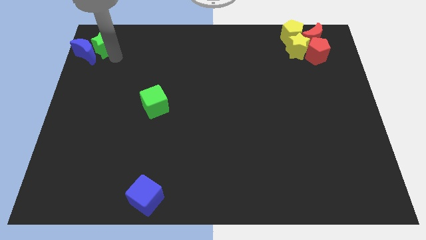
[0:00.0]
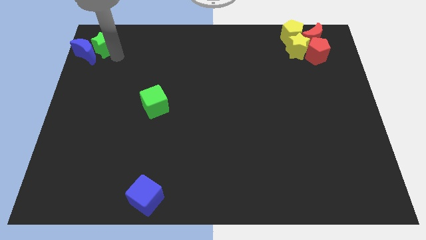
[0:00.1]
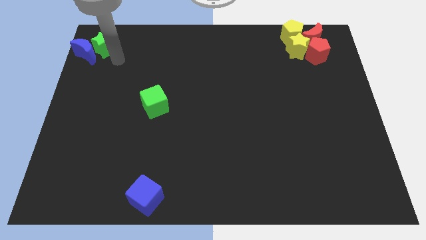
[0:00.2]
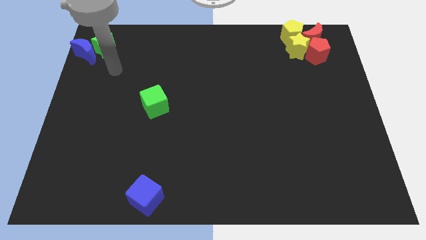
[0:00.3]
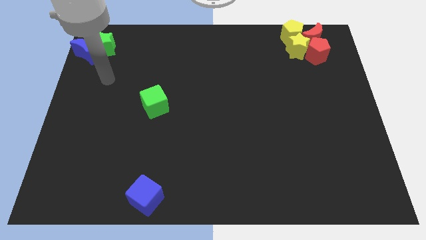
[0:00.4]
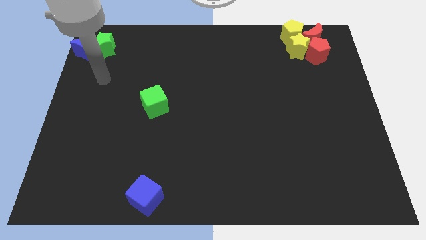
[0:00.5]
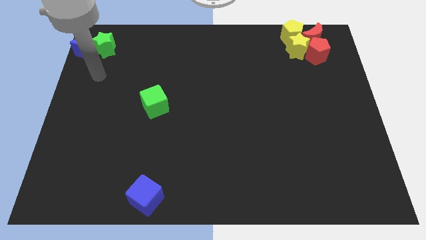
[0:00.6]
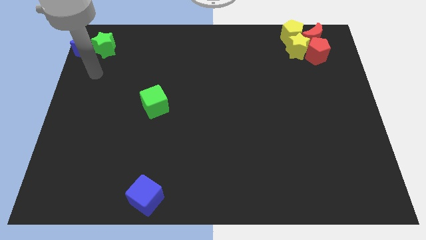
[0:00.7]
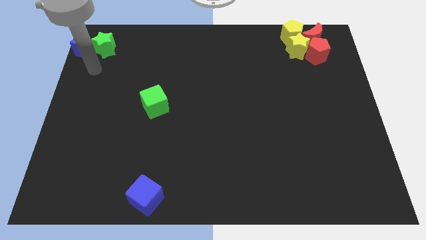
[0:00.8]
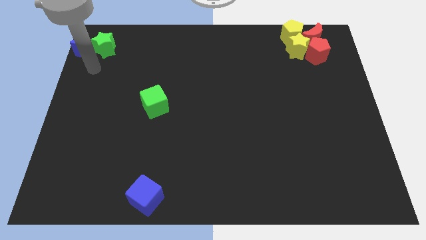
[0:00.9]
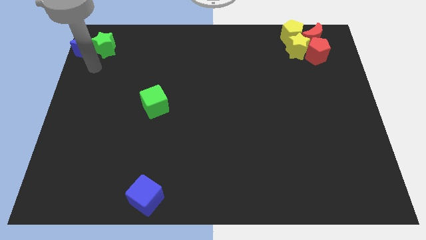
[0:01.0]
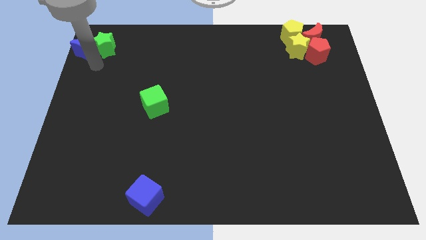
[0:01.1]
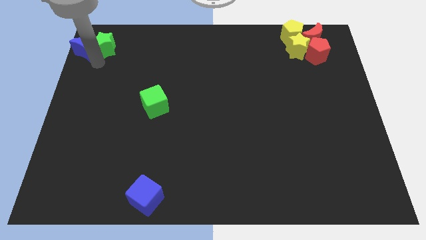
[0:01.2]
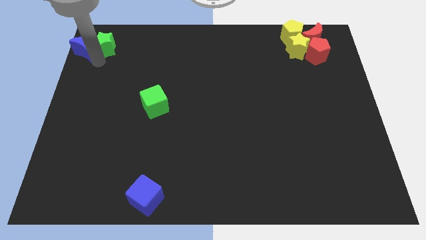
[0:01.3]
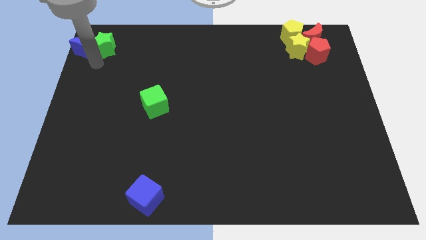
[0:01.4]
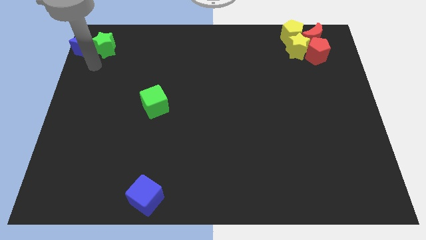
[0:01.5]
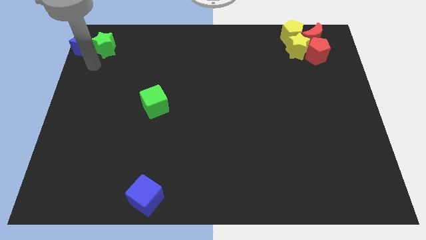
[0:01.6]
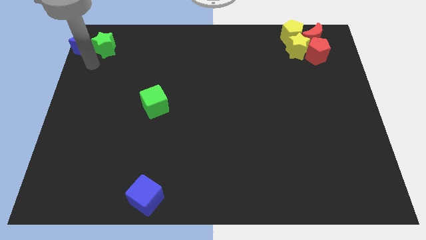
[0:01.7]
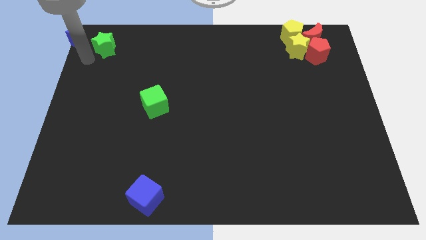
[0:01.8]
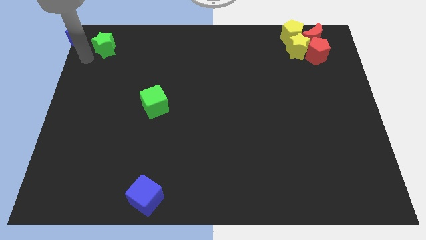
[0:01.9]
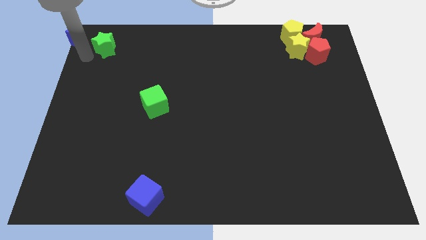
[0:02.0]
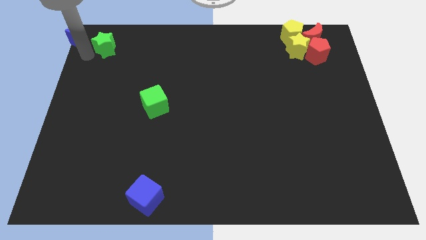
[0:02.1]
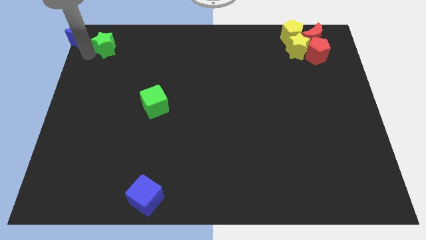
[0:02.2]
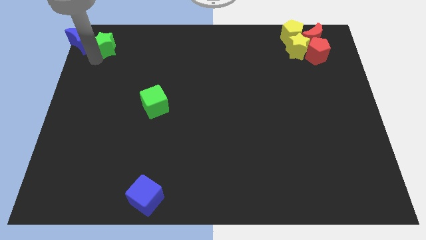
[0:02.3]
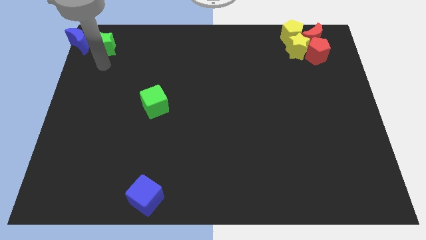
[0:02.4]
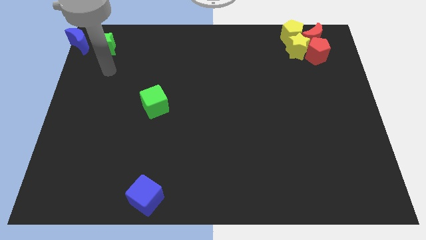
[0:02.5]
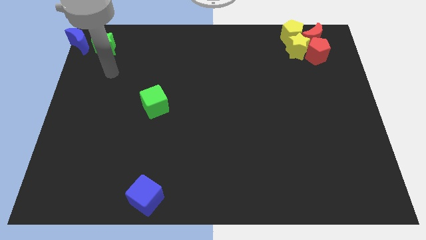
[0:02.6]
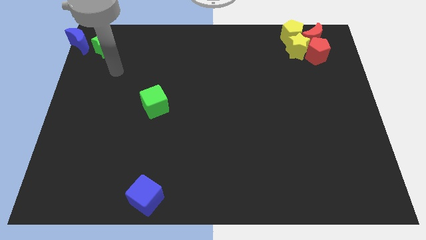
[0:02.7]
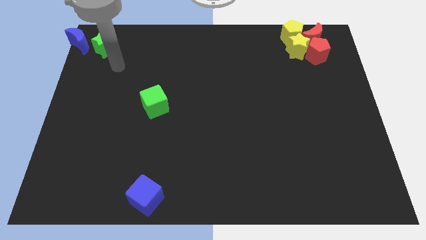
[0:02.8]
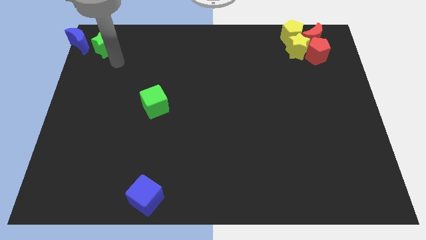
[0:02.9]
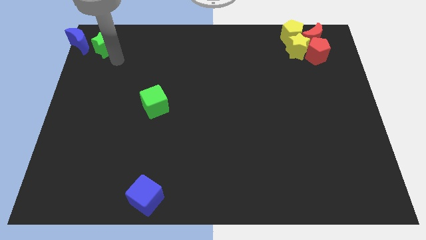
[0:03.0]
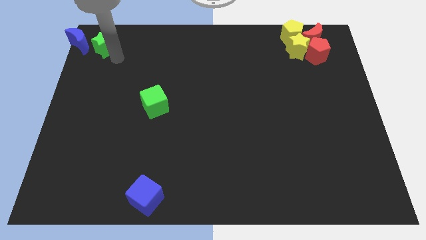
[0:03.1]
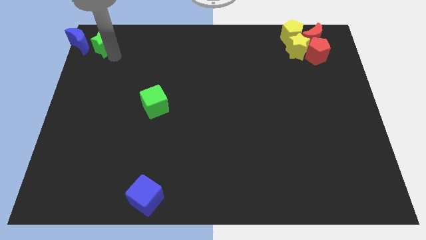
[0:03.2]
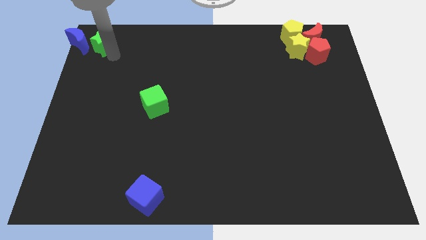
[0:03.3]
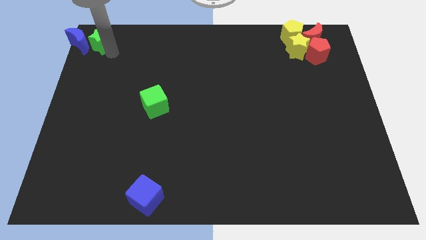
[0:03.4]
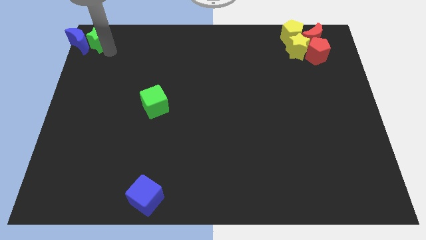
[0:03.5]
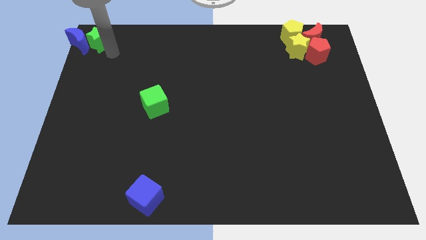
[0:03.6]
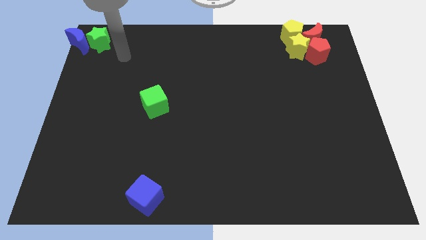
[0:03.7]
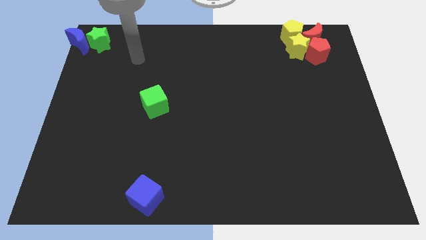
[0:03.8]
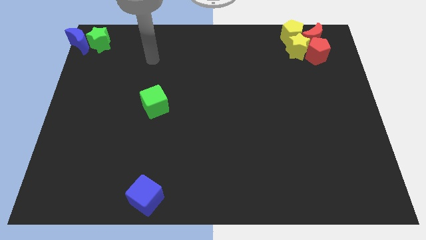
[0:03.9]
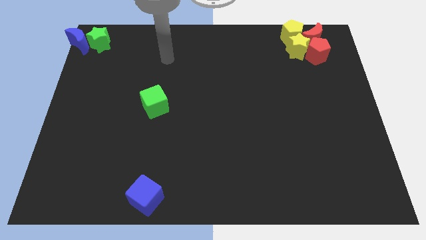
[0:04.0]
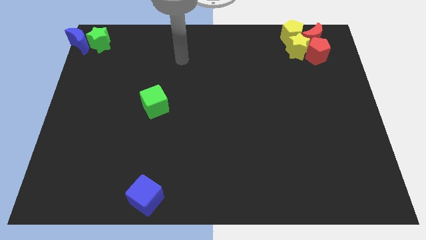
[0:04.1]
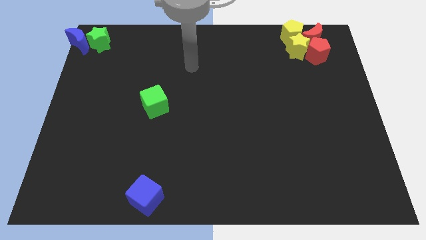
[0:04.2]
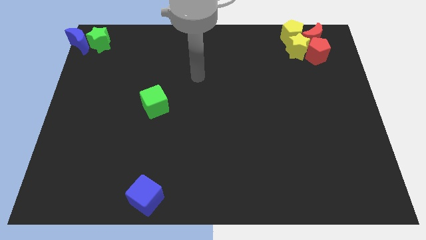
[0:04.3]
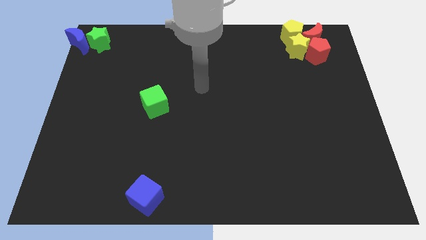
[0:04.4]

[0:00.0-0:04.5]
place green star along with blue moon to the top left corner

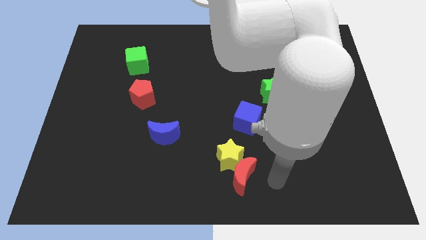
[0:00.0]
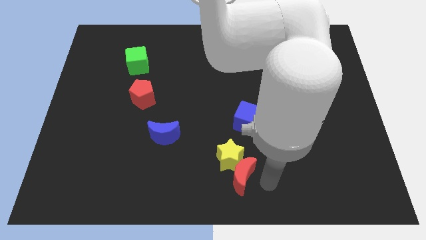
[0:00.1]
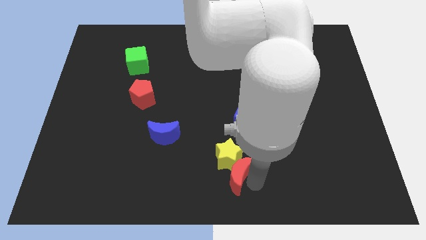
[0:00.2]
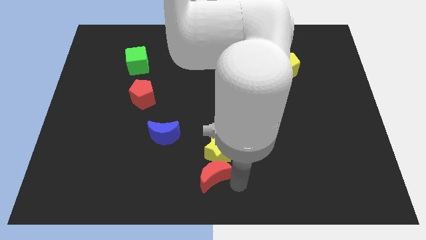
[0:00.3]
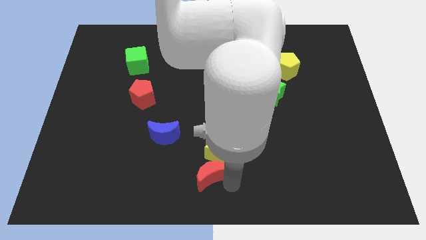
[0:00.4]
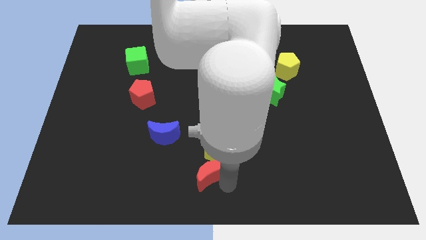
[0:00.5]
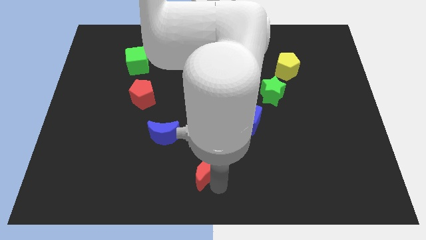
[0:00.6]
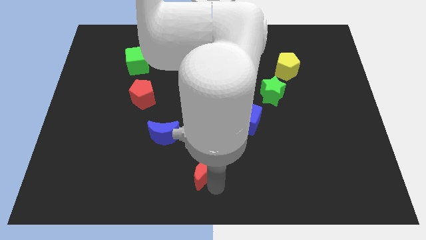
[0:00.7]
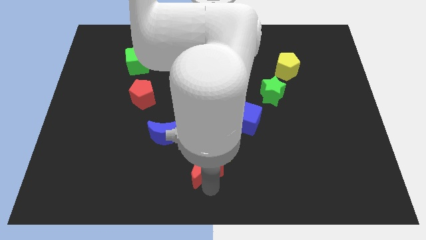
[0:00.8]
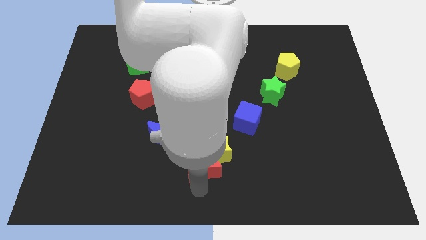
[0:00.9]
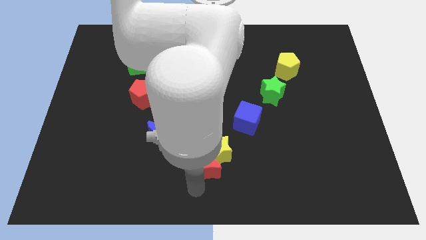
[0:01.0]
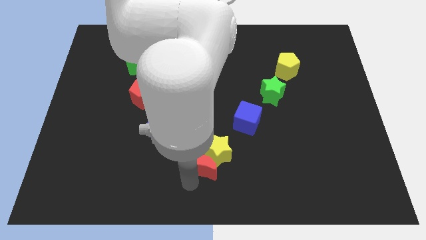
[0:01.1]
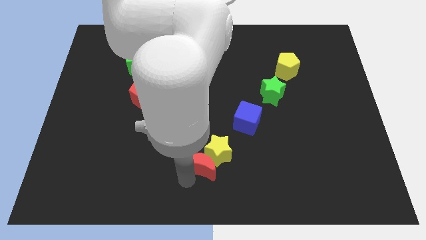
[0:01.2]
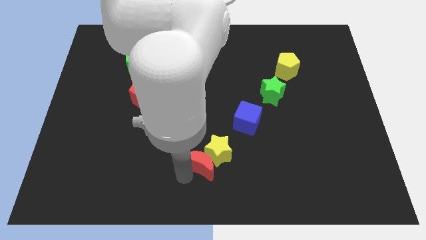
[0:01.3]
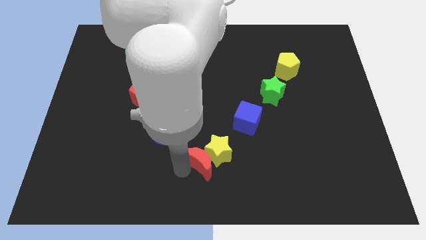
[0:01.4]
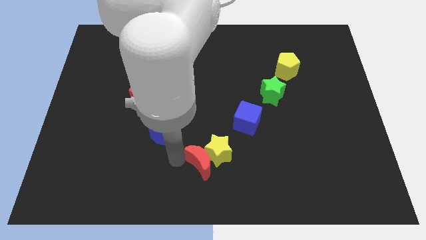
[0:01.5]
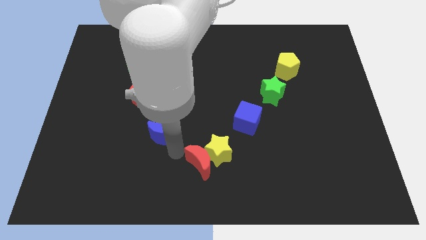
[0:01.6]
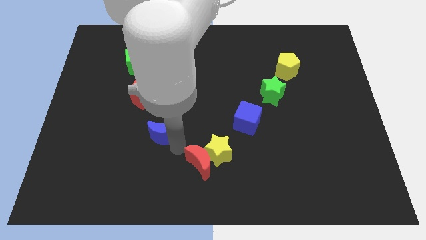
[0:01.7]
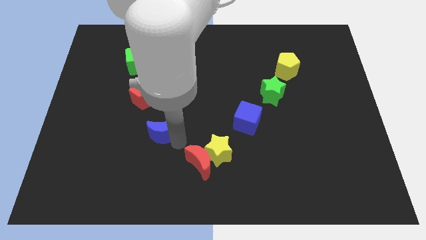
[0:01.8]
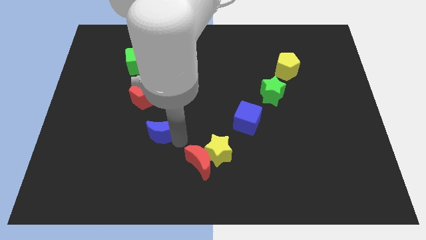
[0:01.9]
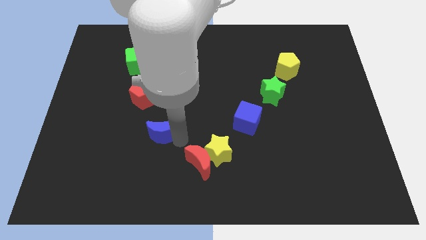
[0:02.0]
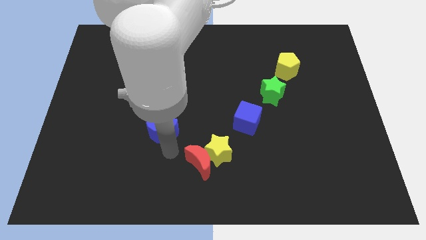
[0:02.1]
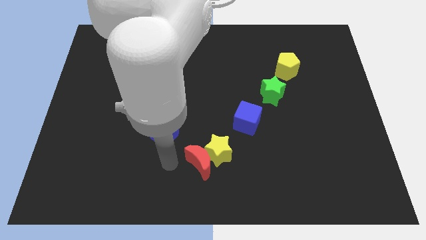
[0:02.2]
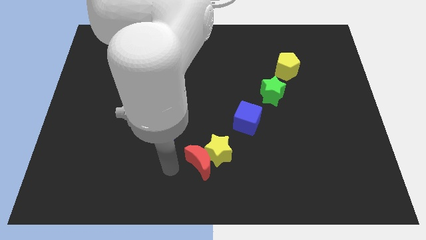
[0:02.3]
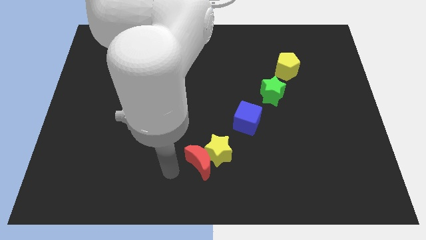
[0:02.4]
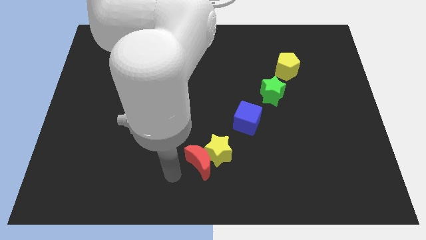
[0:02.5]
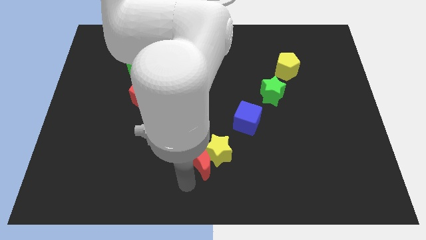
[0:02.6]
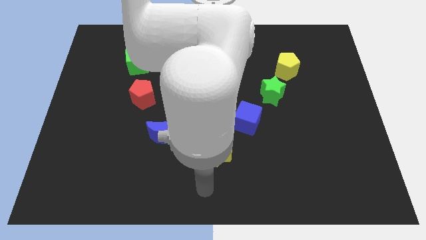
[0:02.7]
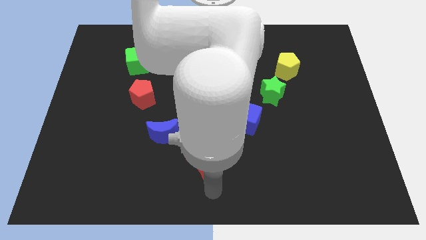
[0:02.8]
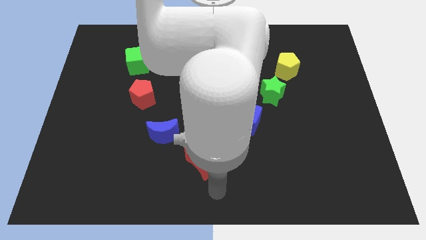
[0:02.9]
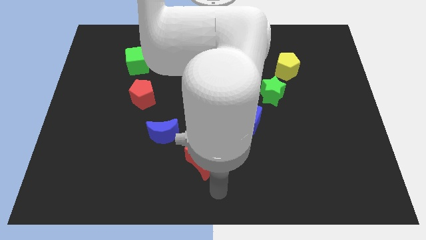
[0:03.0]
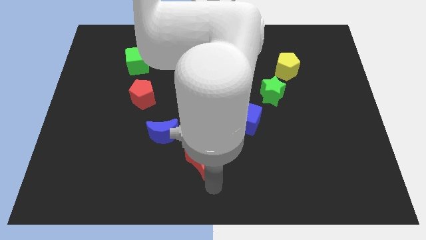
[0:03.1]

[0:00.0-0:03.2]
push the red moon slightly to the left side

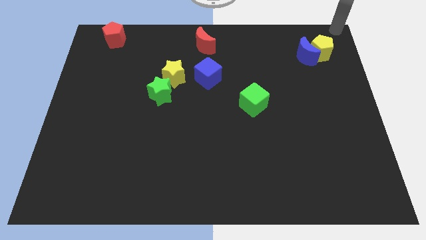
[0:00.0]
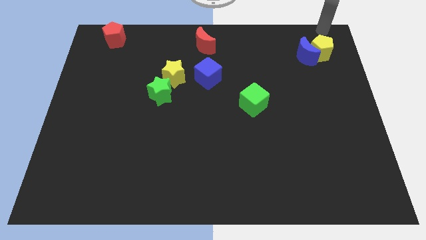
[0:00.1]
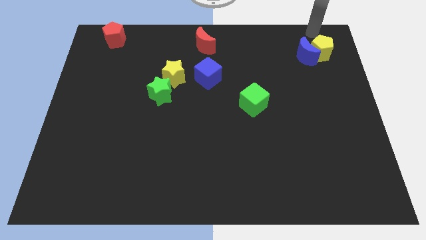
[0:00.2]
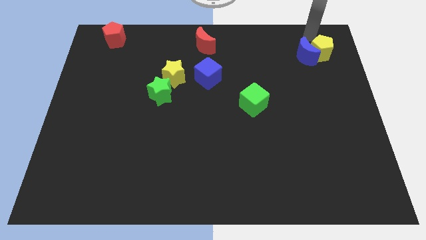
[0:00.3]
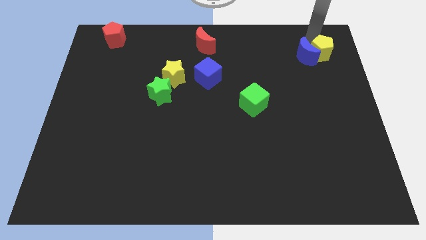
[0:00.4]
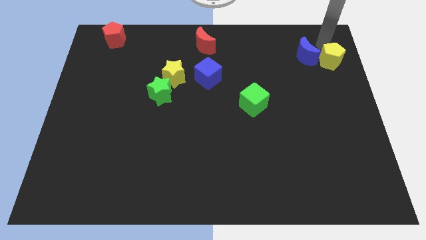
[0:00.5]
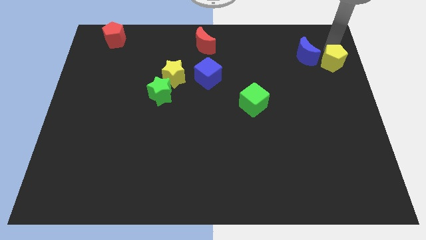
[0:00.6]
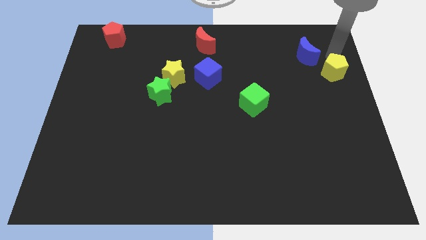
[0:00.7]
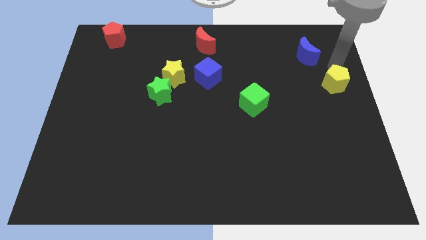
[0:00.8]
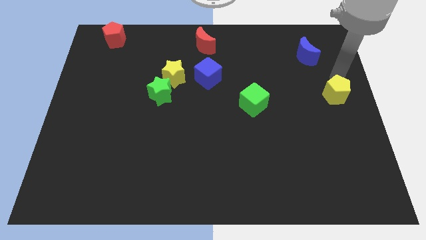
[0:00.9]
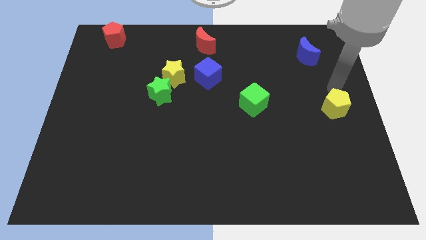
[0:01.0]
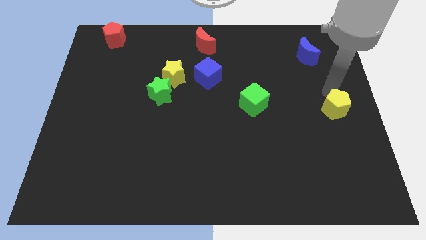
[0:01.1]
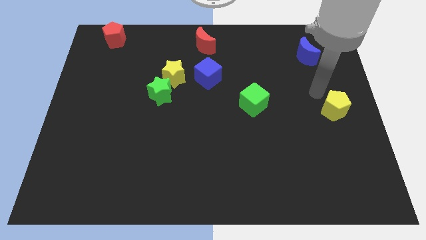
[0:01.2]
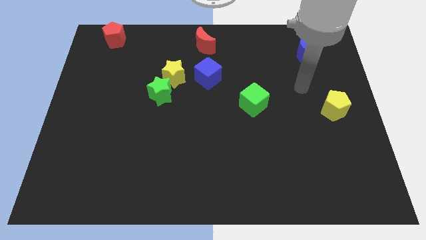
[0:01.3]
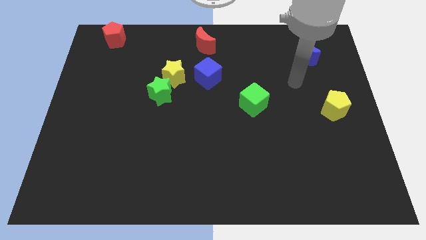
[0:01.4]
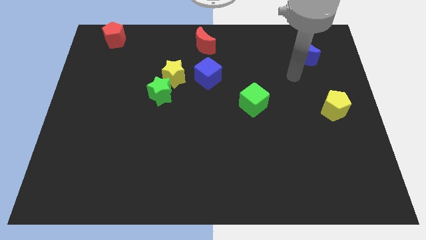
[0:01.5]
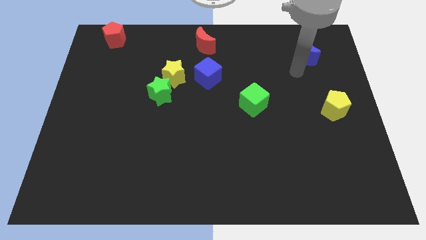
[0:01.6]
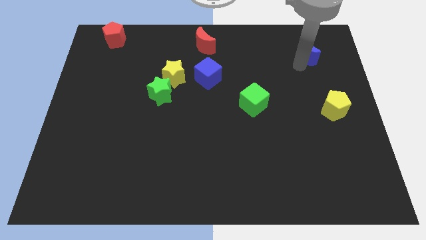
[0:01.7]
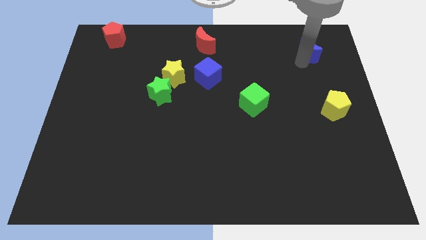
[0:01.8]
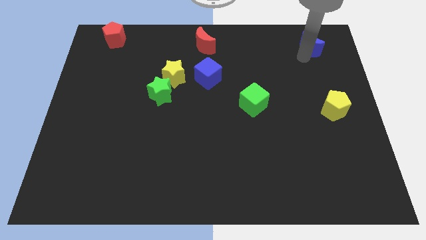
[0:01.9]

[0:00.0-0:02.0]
push the yellow pentagon away from the blue crescent
